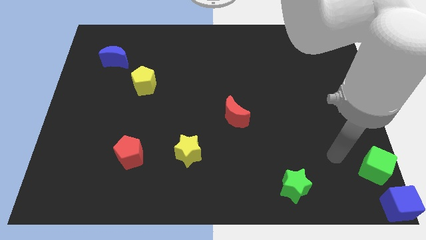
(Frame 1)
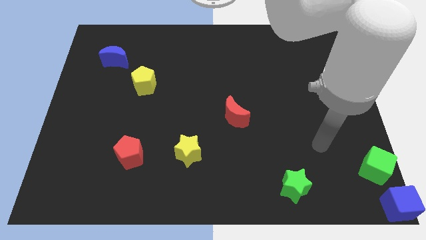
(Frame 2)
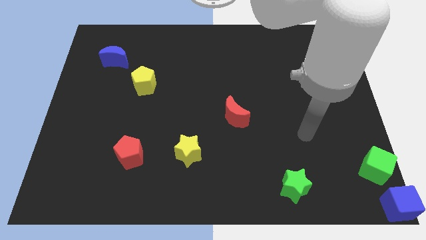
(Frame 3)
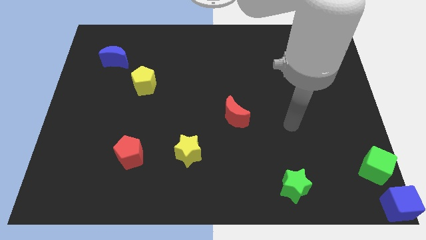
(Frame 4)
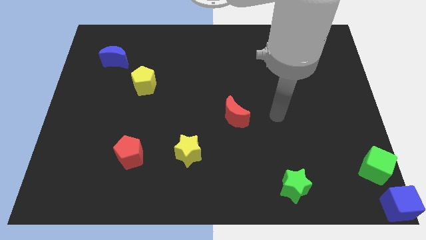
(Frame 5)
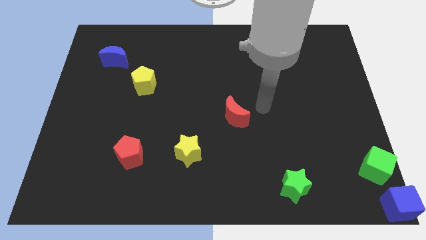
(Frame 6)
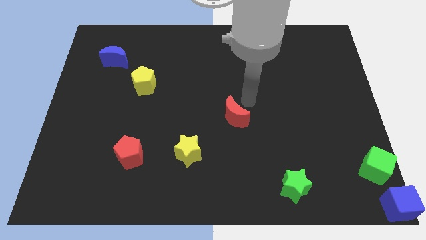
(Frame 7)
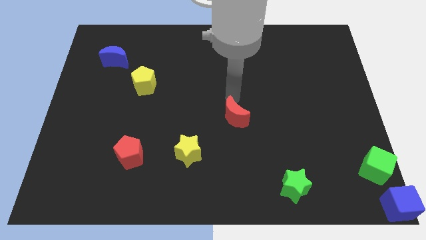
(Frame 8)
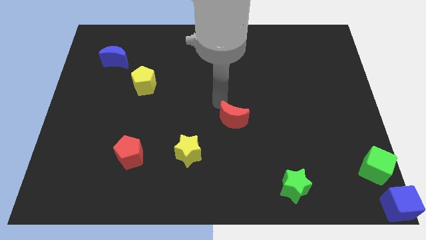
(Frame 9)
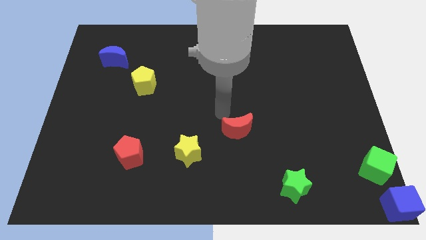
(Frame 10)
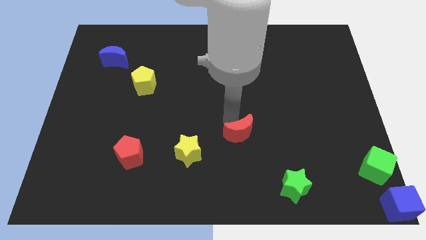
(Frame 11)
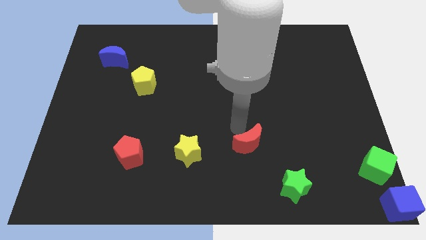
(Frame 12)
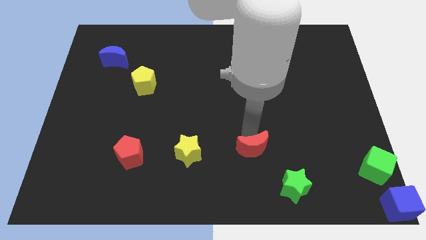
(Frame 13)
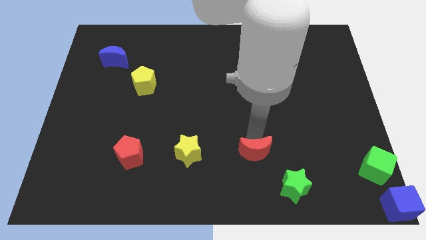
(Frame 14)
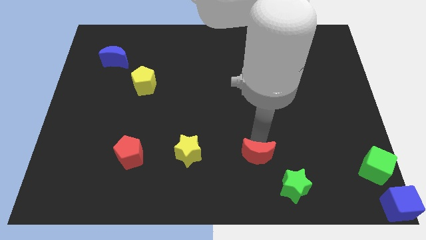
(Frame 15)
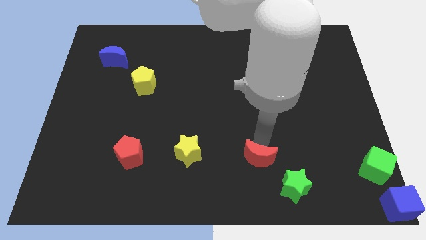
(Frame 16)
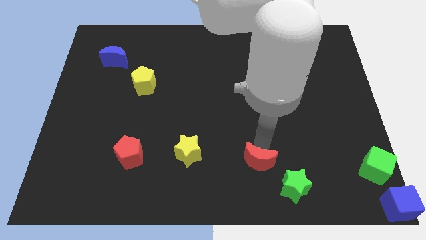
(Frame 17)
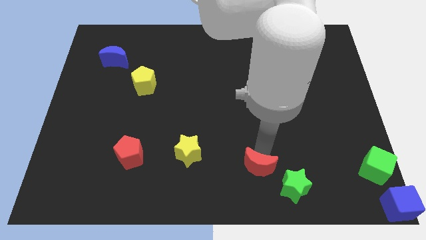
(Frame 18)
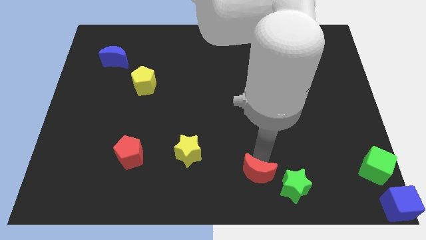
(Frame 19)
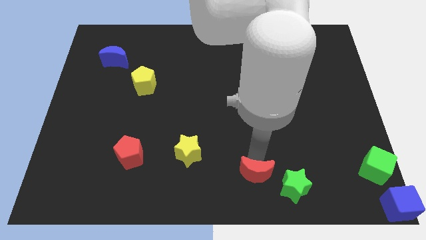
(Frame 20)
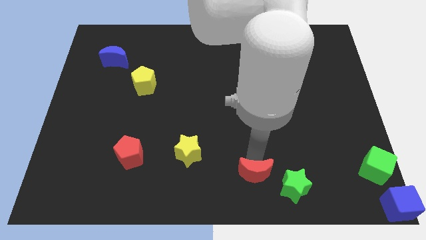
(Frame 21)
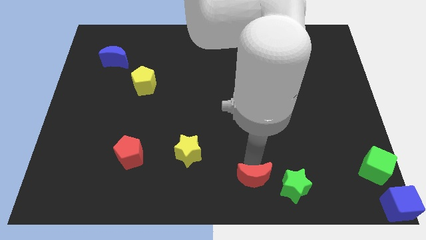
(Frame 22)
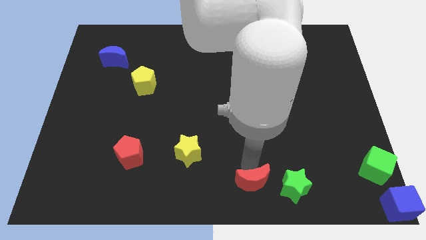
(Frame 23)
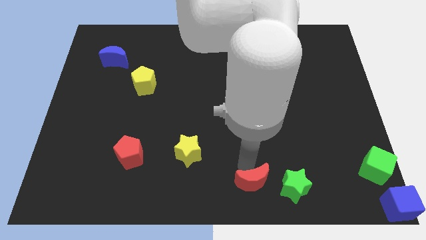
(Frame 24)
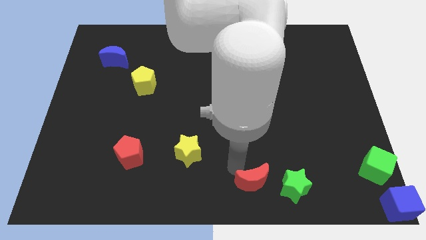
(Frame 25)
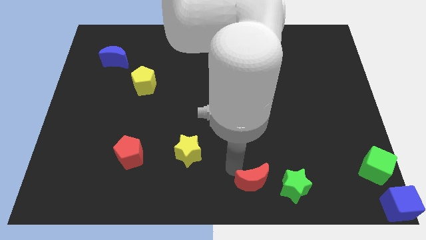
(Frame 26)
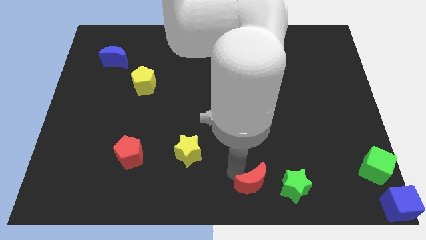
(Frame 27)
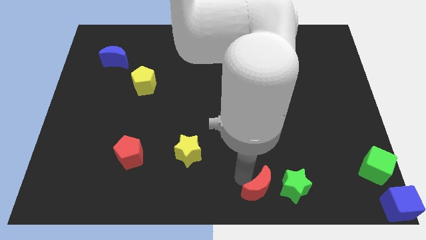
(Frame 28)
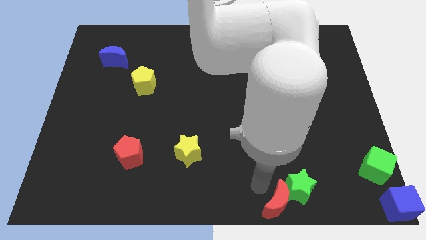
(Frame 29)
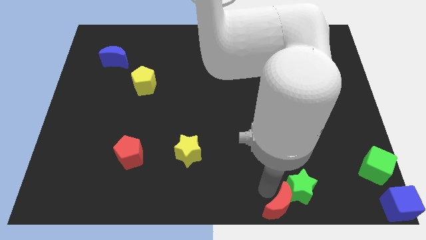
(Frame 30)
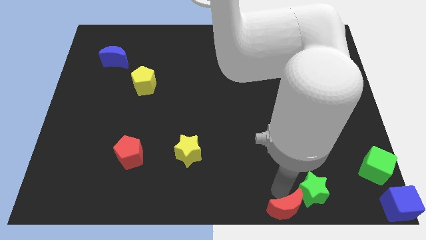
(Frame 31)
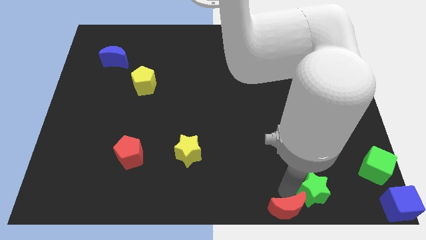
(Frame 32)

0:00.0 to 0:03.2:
slide the red moon into the green star

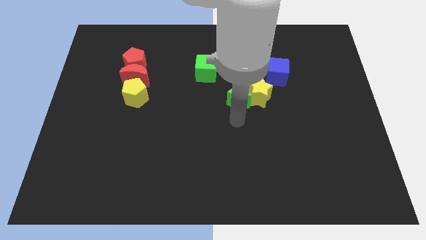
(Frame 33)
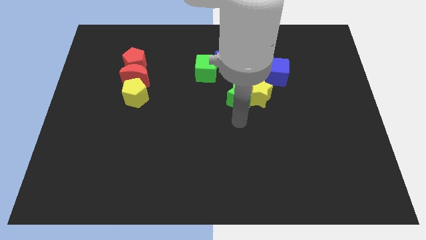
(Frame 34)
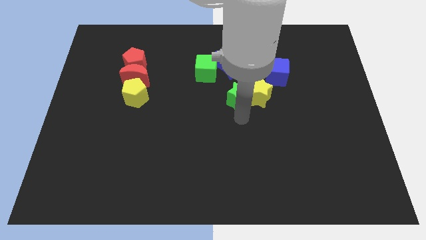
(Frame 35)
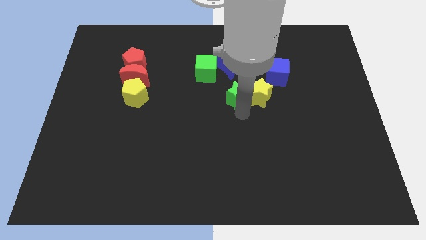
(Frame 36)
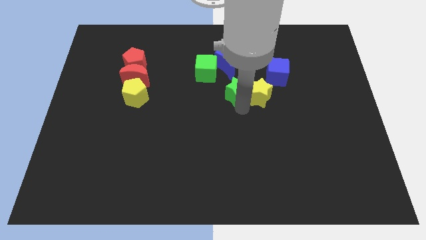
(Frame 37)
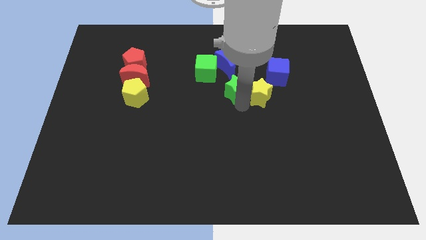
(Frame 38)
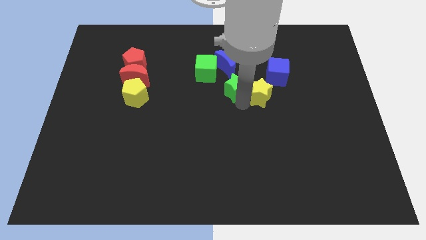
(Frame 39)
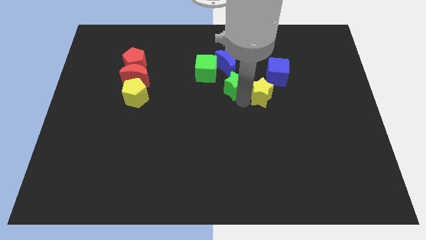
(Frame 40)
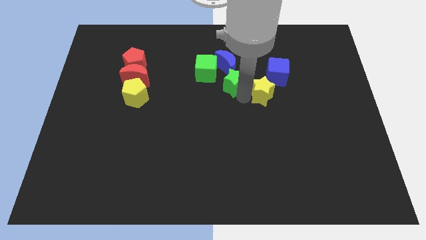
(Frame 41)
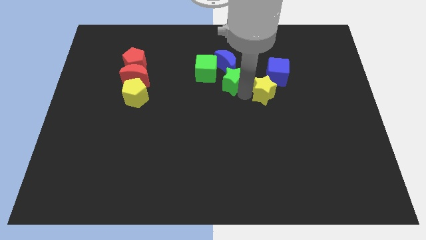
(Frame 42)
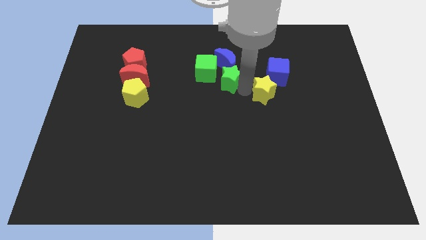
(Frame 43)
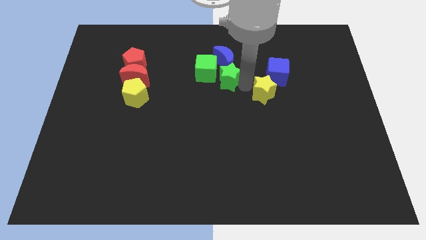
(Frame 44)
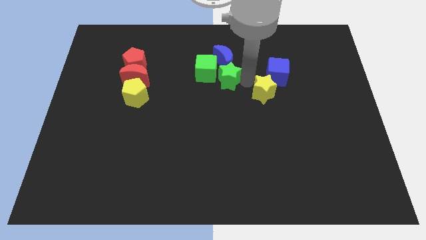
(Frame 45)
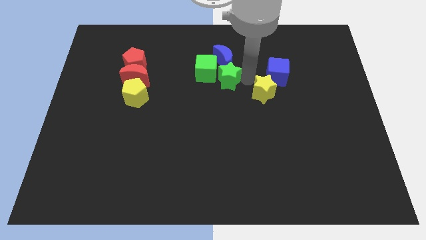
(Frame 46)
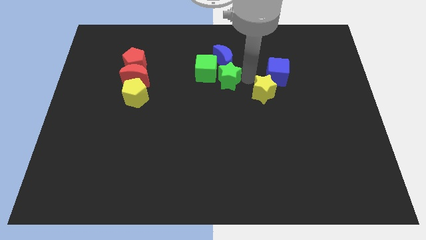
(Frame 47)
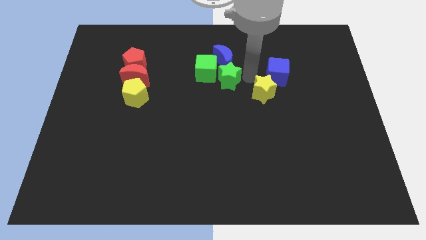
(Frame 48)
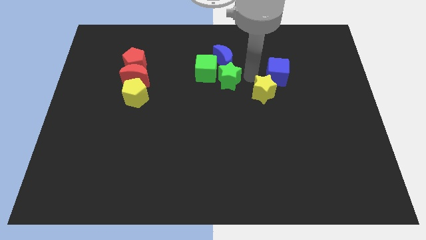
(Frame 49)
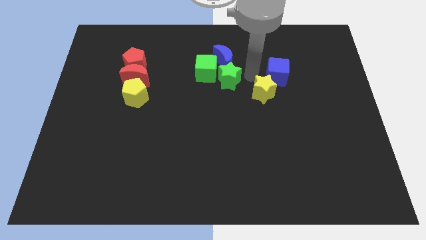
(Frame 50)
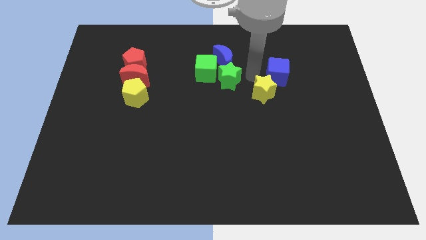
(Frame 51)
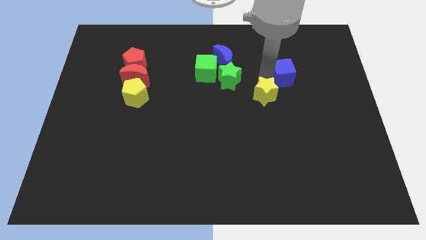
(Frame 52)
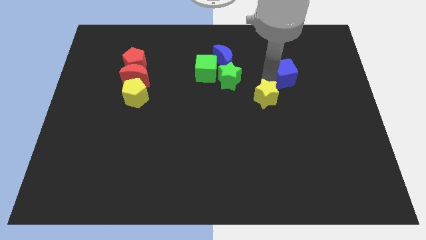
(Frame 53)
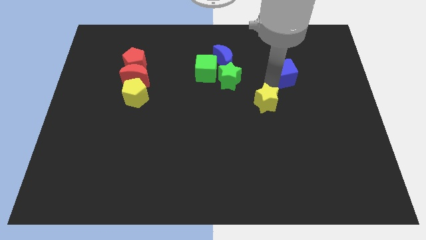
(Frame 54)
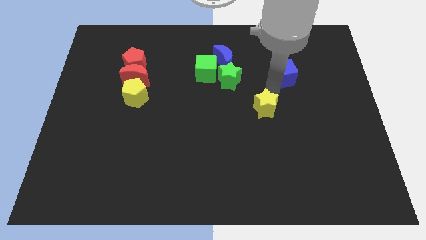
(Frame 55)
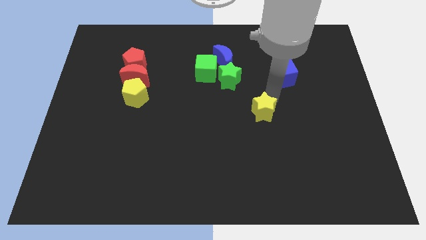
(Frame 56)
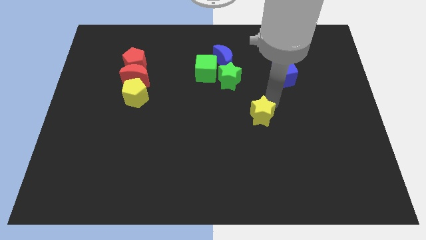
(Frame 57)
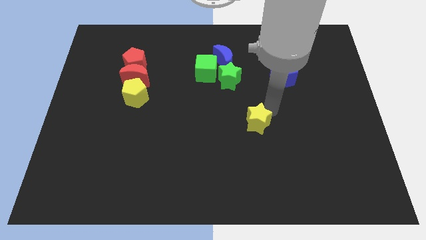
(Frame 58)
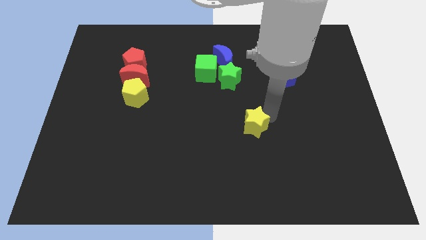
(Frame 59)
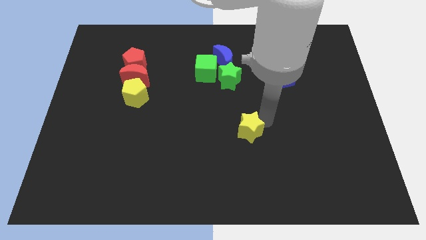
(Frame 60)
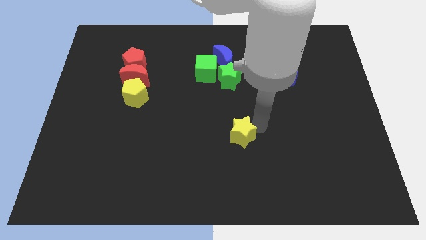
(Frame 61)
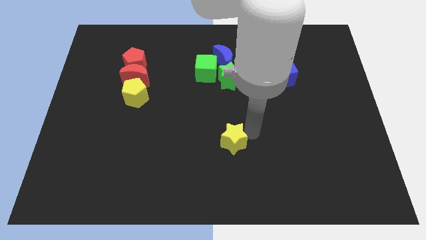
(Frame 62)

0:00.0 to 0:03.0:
move the yellow star vertical to the green star

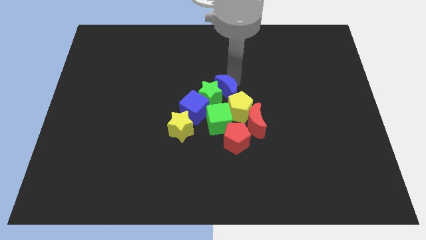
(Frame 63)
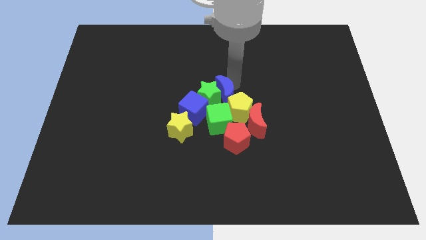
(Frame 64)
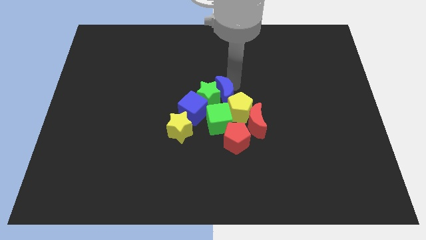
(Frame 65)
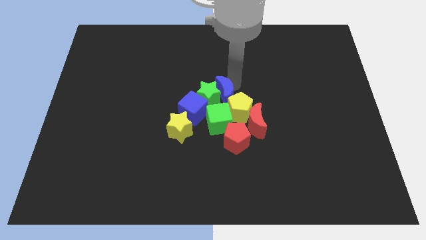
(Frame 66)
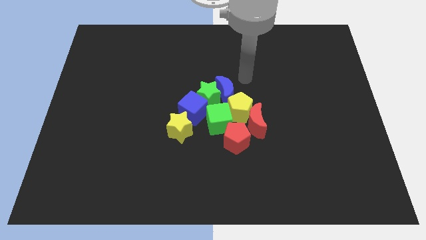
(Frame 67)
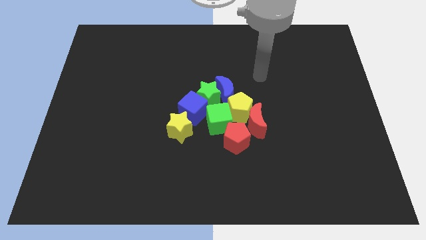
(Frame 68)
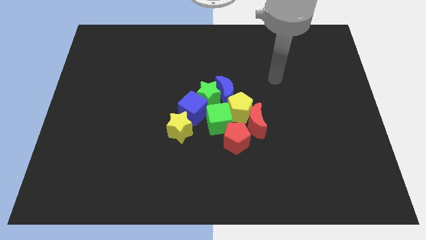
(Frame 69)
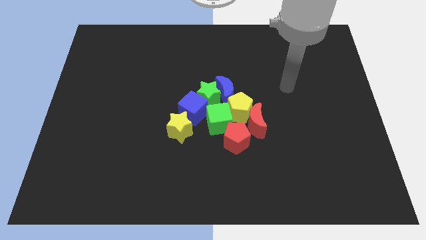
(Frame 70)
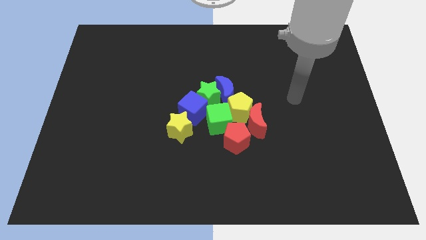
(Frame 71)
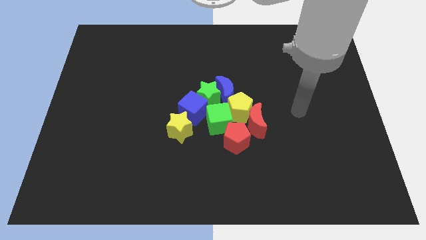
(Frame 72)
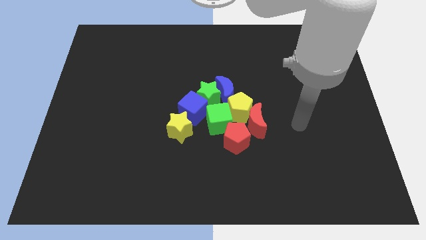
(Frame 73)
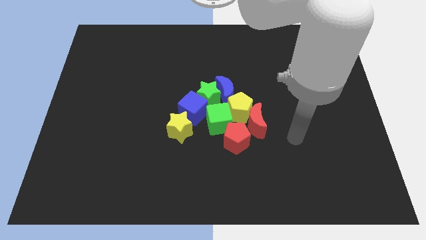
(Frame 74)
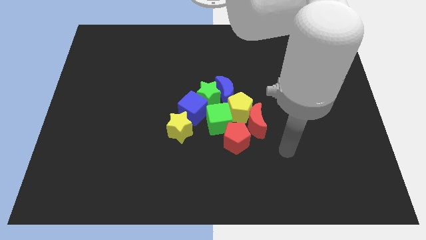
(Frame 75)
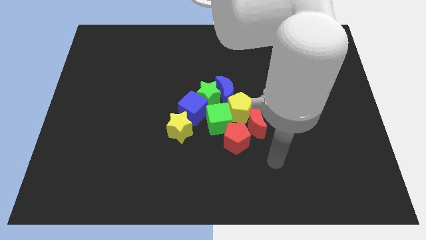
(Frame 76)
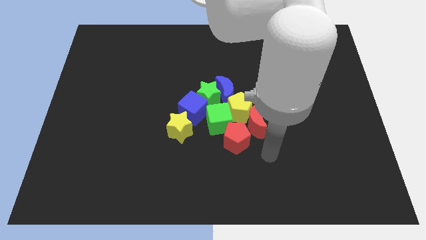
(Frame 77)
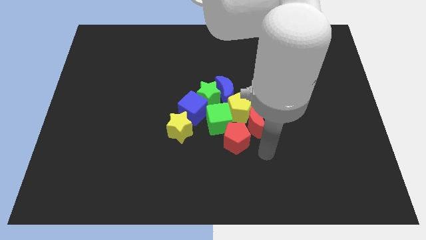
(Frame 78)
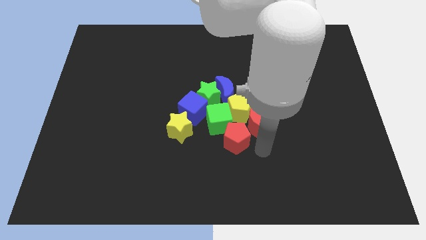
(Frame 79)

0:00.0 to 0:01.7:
move away from the blue moon

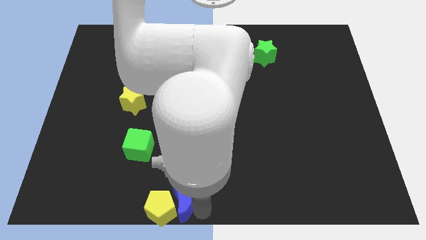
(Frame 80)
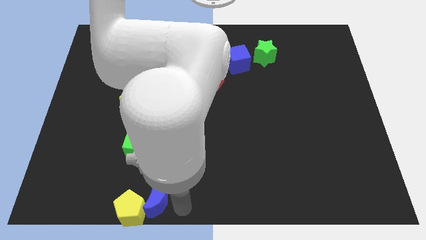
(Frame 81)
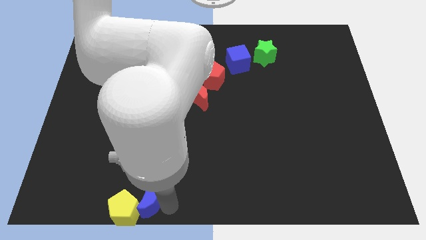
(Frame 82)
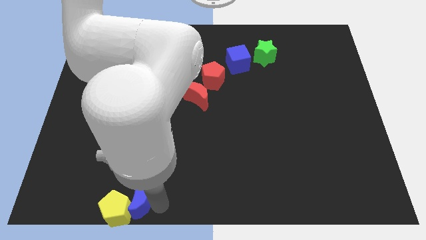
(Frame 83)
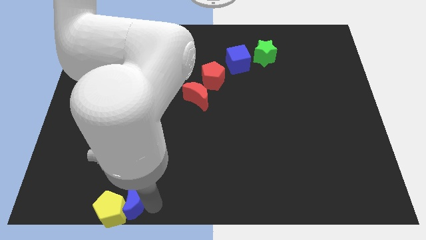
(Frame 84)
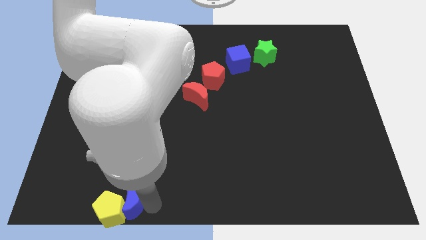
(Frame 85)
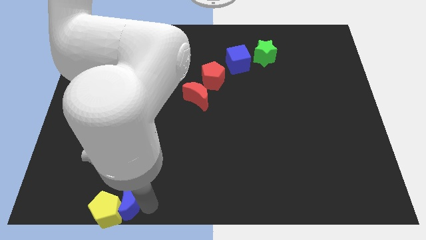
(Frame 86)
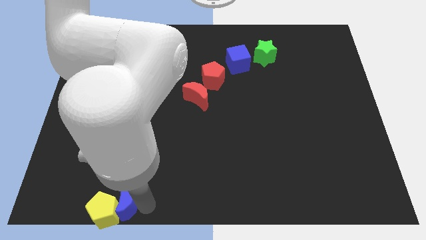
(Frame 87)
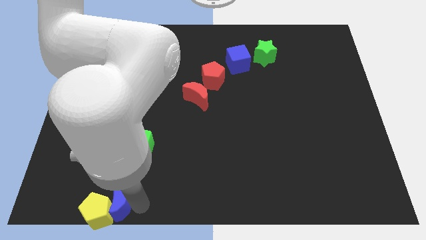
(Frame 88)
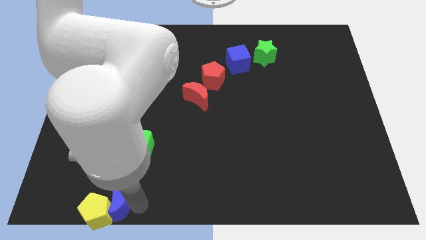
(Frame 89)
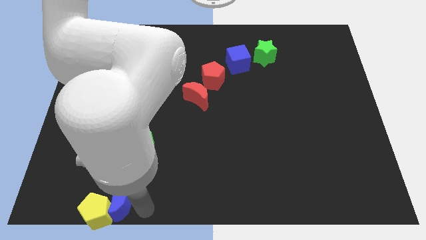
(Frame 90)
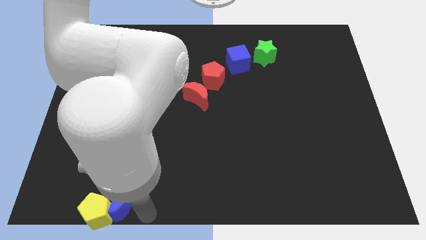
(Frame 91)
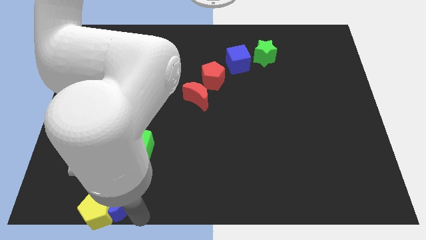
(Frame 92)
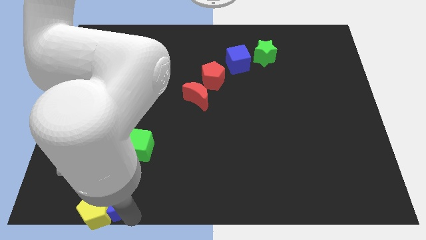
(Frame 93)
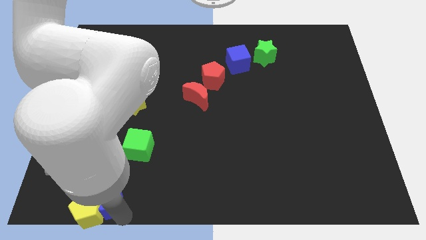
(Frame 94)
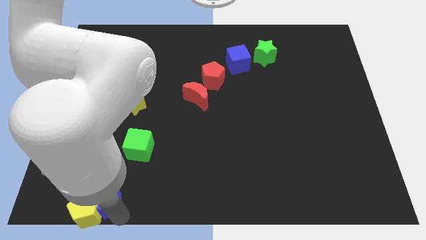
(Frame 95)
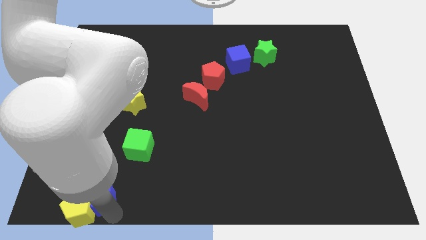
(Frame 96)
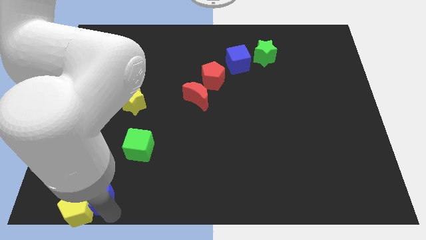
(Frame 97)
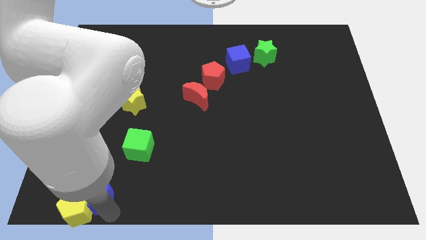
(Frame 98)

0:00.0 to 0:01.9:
move the yellow pentagon and blue crescent to the bottom left side of the green cube
